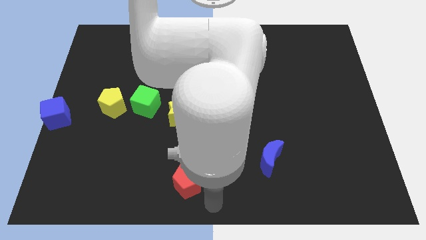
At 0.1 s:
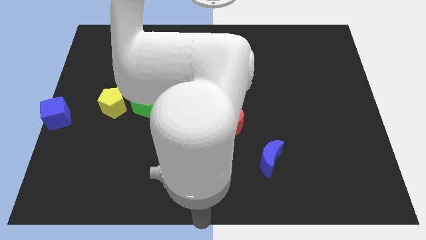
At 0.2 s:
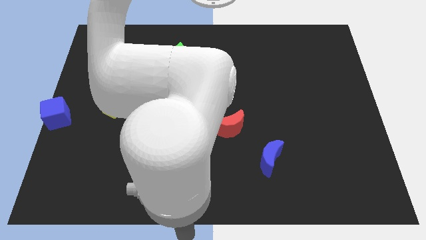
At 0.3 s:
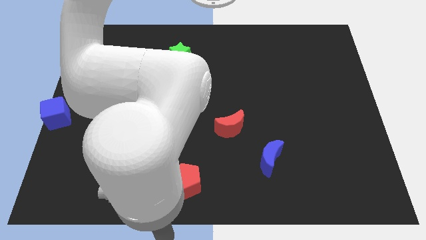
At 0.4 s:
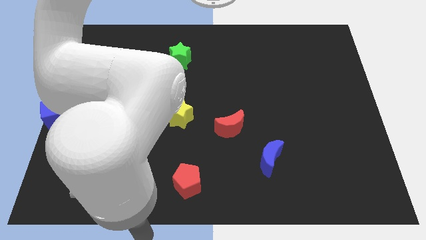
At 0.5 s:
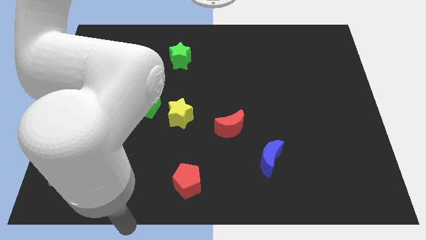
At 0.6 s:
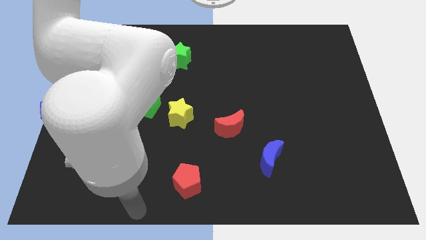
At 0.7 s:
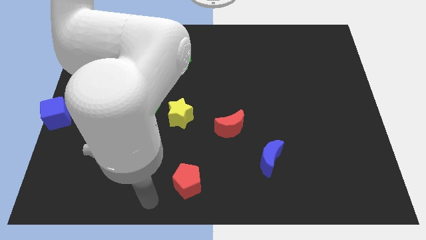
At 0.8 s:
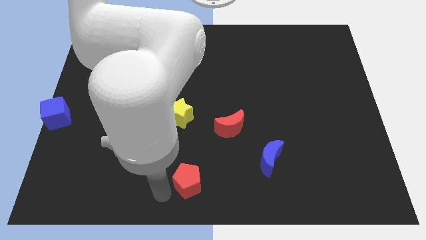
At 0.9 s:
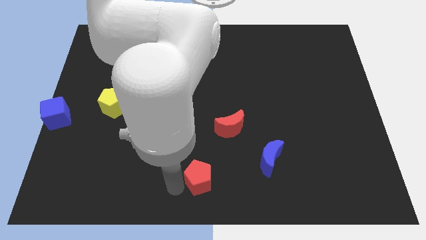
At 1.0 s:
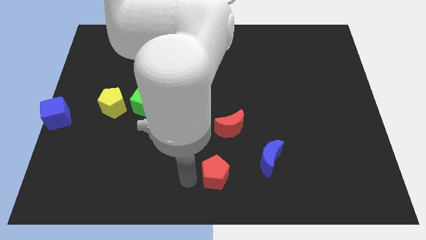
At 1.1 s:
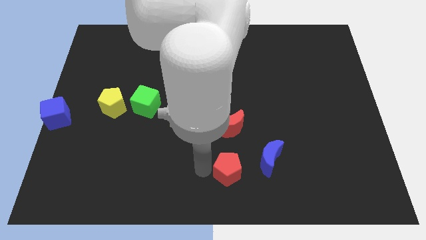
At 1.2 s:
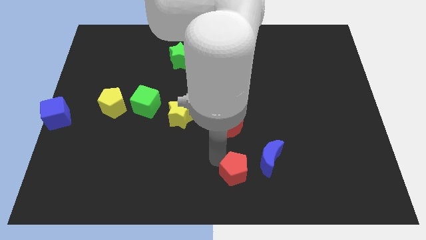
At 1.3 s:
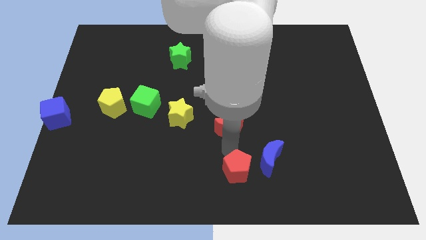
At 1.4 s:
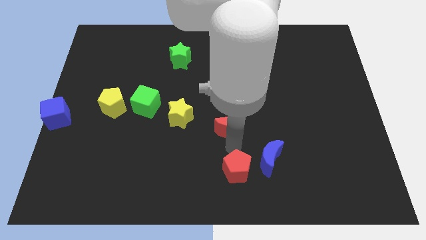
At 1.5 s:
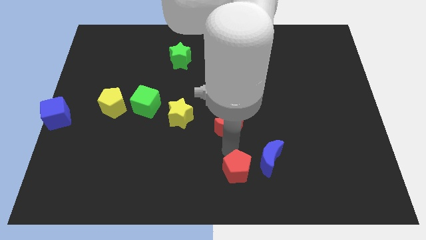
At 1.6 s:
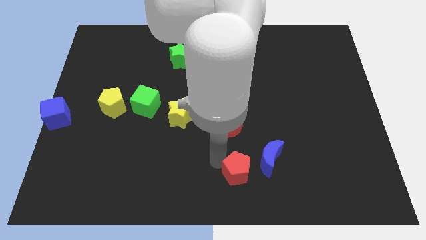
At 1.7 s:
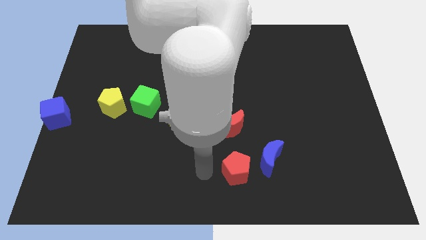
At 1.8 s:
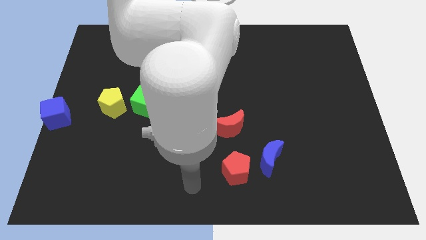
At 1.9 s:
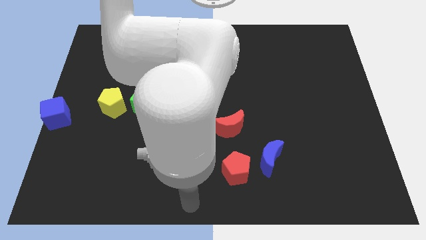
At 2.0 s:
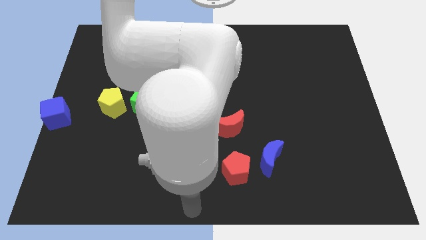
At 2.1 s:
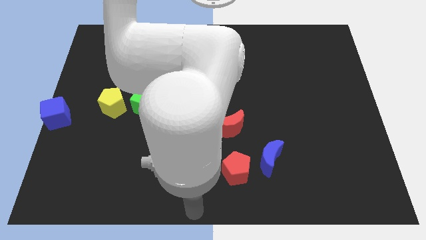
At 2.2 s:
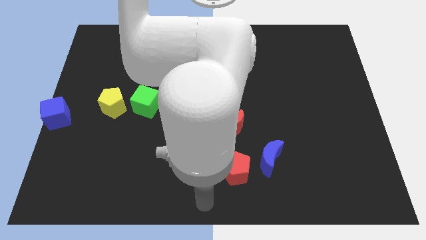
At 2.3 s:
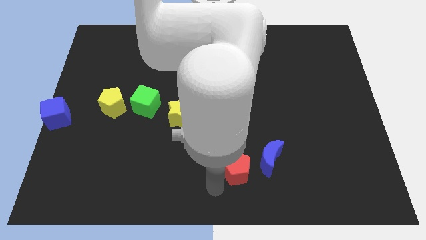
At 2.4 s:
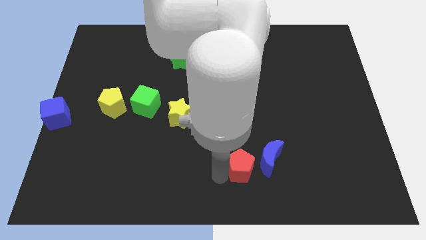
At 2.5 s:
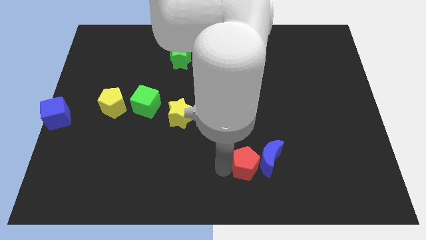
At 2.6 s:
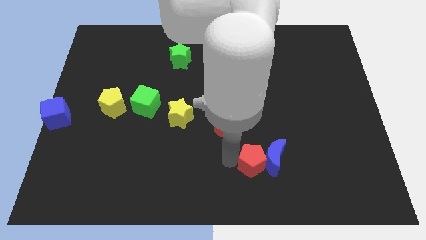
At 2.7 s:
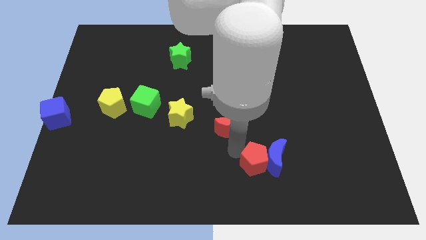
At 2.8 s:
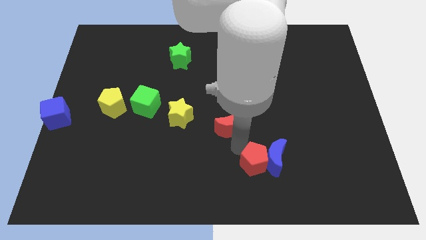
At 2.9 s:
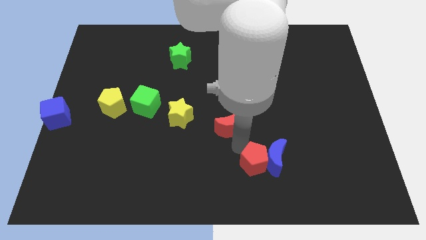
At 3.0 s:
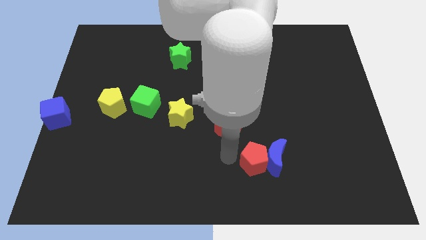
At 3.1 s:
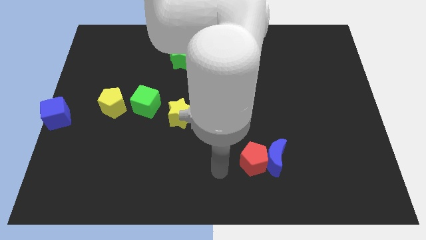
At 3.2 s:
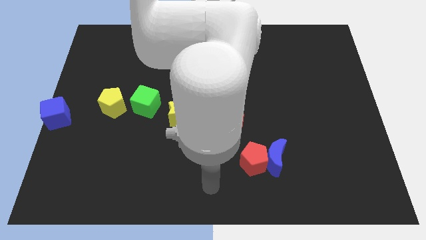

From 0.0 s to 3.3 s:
make the red pentagon to touch the blue crescent

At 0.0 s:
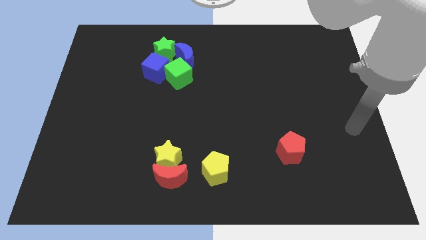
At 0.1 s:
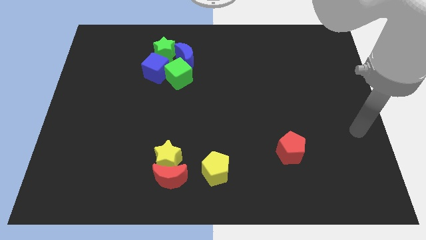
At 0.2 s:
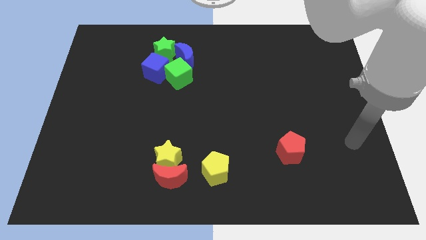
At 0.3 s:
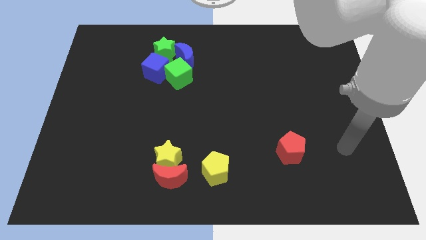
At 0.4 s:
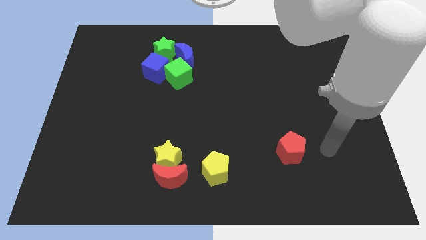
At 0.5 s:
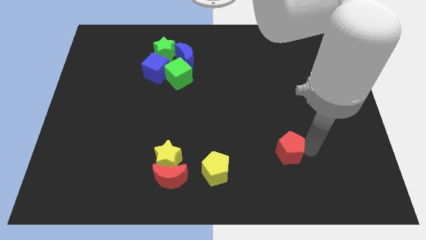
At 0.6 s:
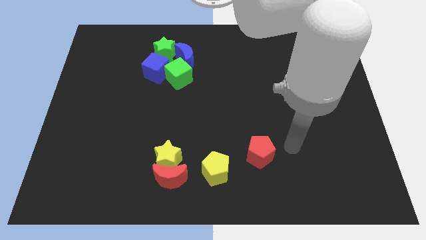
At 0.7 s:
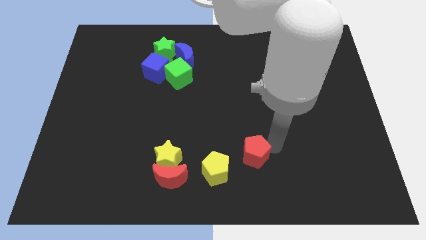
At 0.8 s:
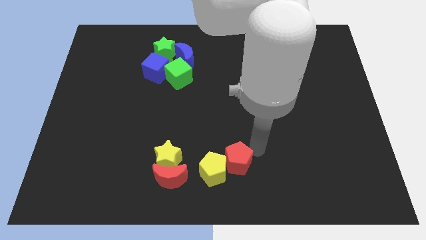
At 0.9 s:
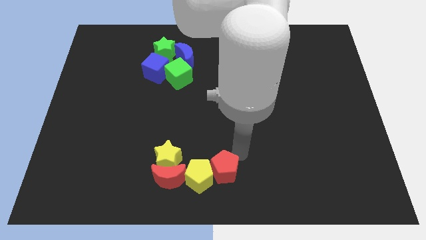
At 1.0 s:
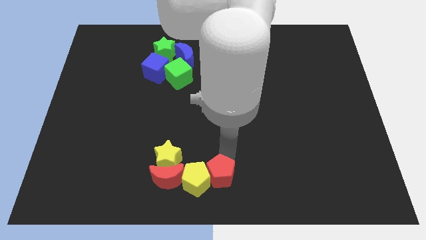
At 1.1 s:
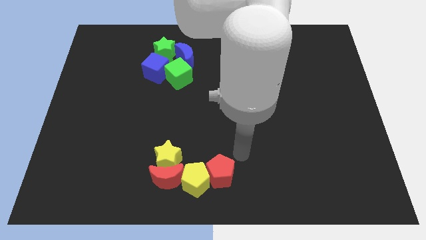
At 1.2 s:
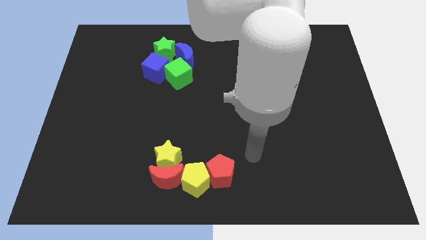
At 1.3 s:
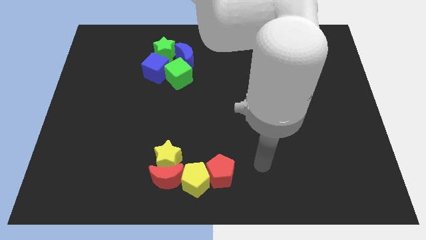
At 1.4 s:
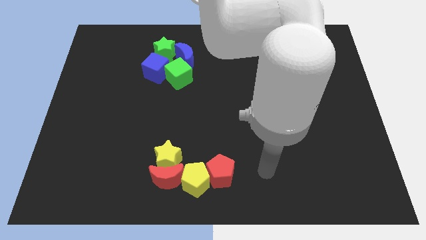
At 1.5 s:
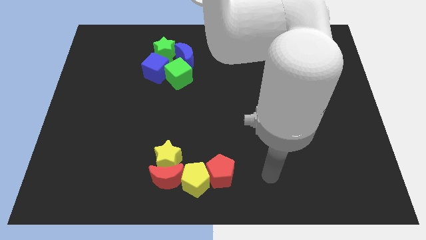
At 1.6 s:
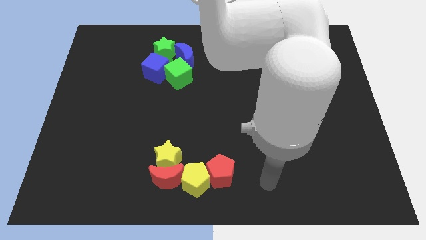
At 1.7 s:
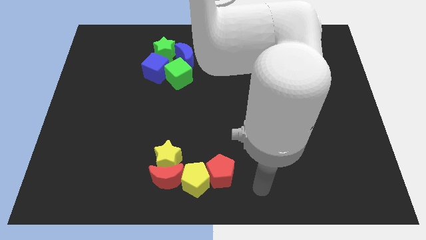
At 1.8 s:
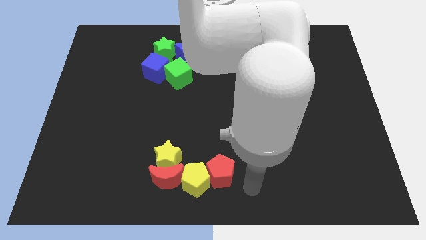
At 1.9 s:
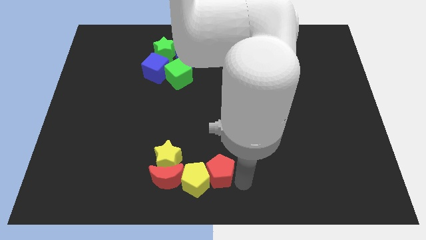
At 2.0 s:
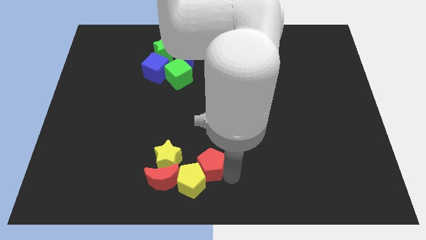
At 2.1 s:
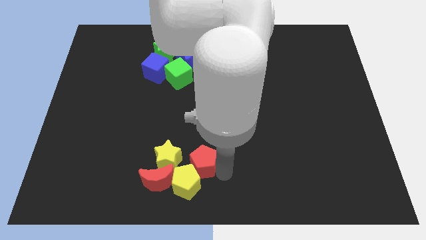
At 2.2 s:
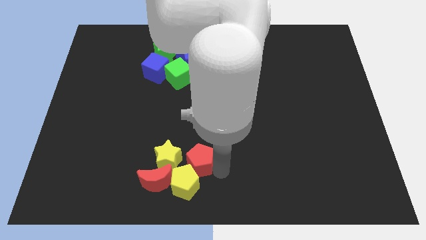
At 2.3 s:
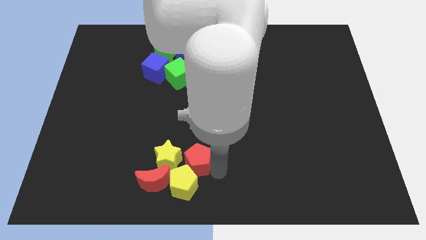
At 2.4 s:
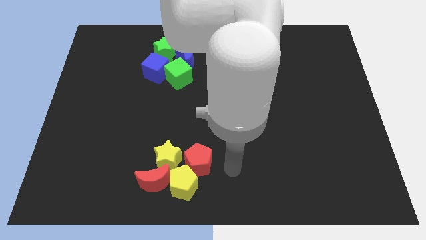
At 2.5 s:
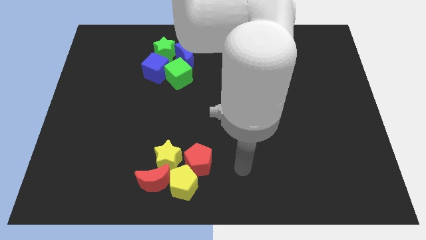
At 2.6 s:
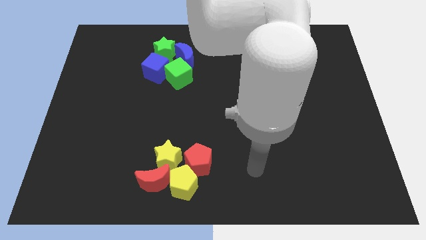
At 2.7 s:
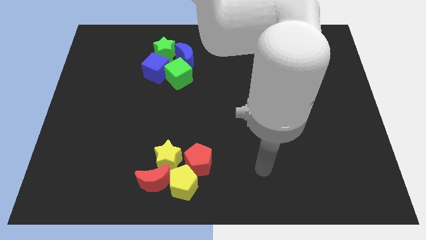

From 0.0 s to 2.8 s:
place red pentagon beside yellow star

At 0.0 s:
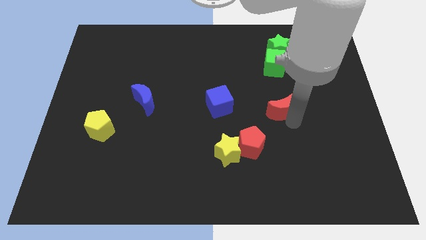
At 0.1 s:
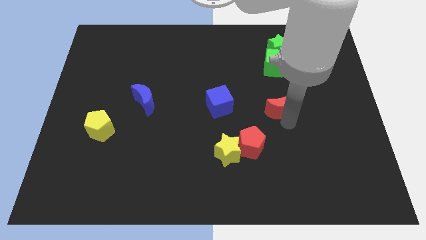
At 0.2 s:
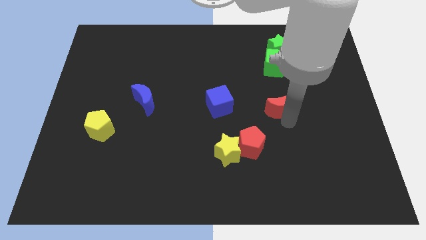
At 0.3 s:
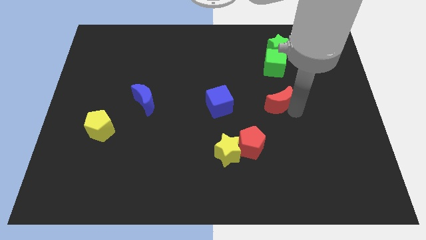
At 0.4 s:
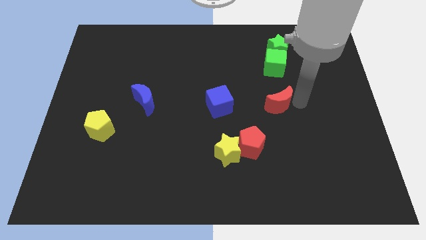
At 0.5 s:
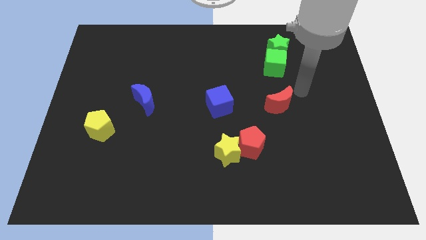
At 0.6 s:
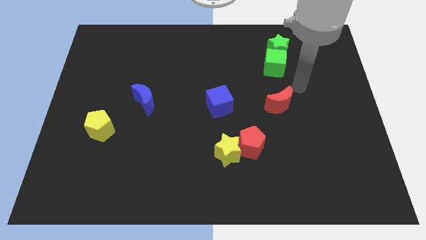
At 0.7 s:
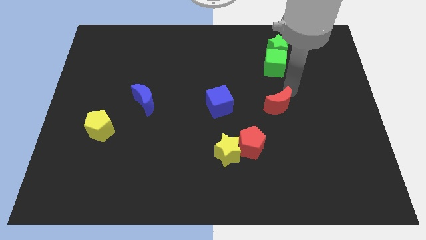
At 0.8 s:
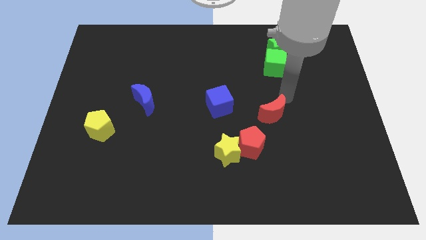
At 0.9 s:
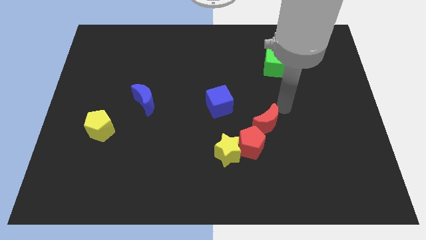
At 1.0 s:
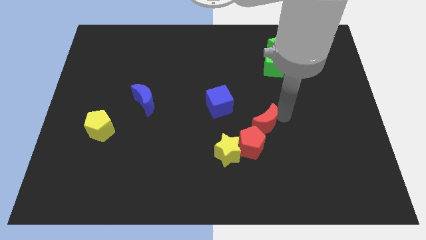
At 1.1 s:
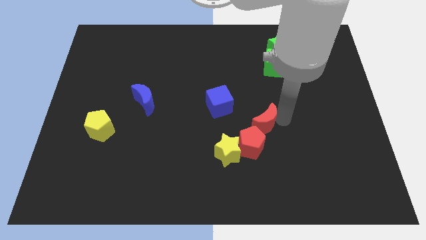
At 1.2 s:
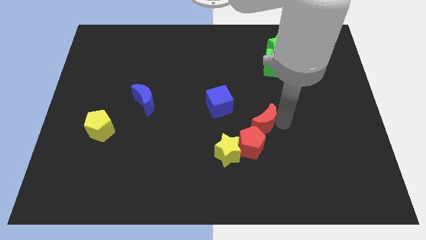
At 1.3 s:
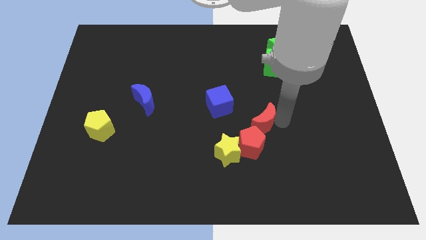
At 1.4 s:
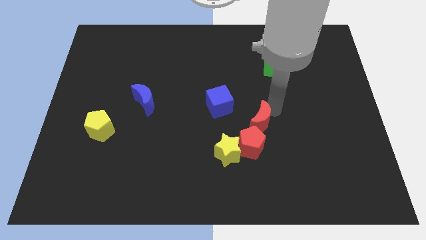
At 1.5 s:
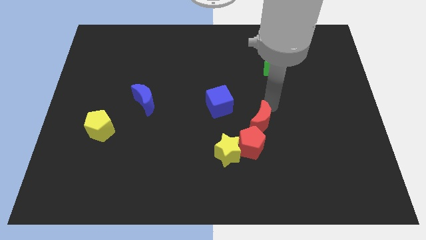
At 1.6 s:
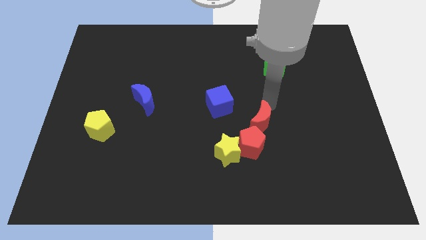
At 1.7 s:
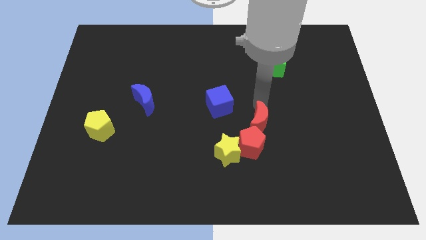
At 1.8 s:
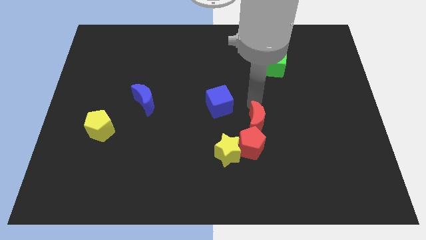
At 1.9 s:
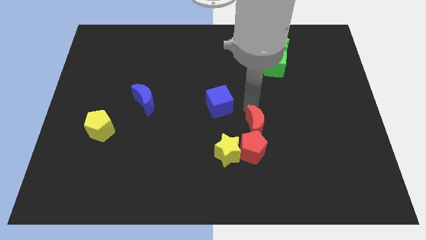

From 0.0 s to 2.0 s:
place the red crescent towards the top side of the red pentagon

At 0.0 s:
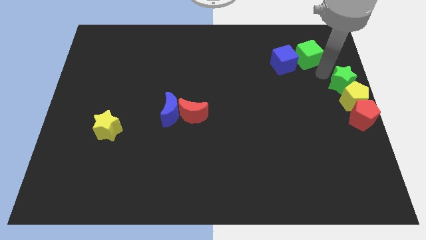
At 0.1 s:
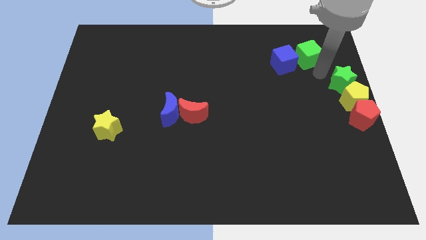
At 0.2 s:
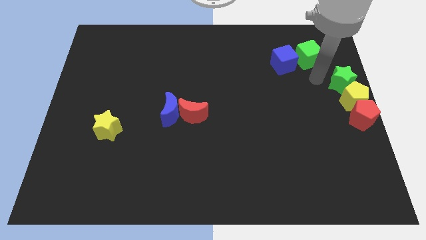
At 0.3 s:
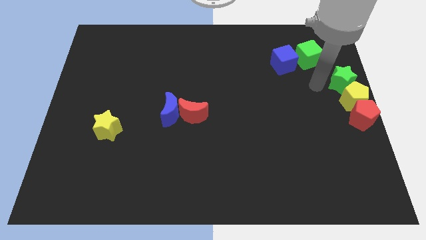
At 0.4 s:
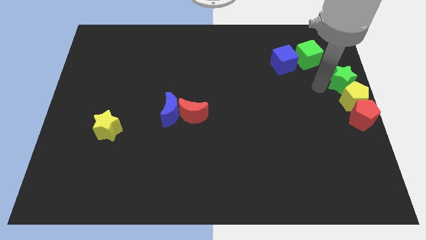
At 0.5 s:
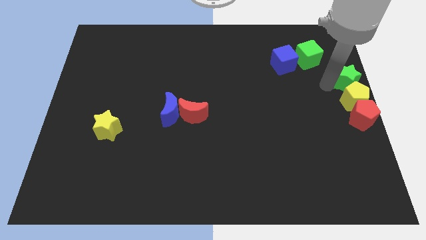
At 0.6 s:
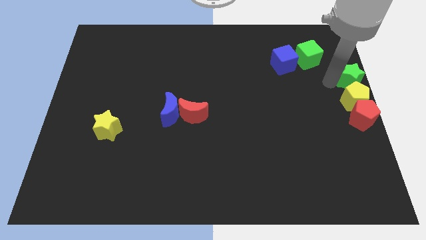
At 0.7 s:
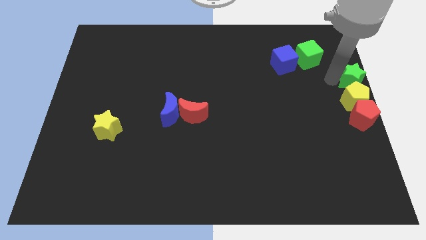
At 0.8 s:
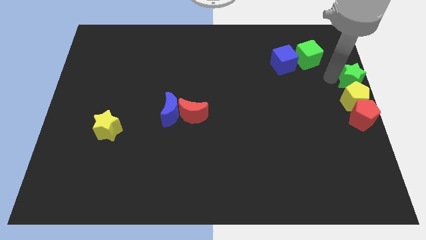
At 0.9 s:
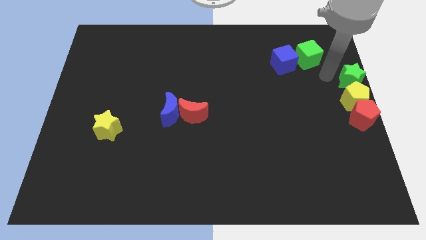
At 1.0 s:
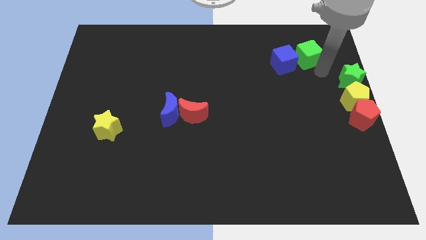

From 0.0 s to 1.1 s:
place the green star on top of the yellow pentagon to form a vertical line

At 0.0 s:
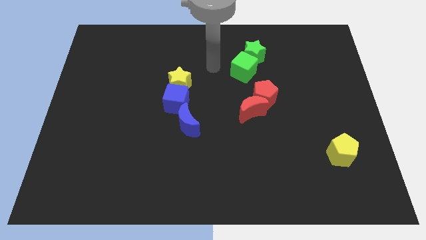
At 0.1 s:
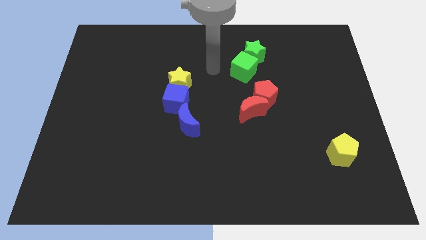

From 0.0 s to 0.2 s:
move the yellow star to the left side of the board
